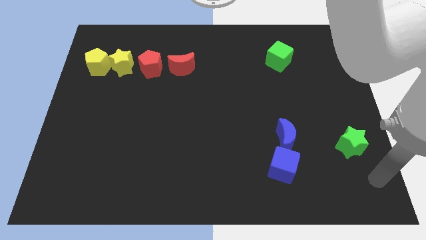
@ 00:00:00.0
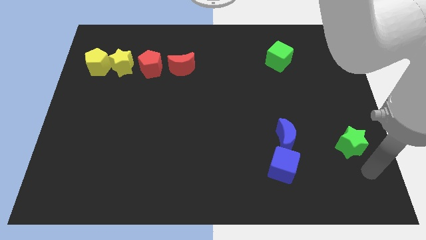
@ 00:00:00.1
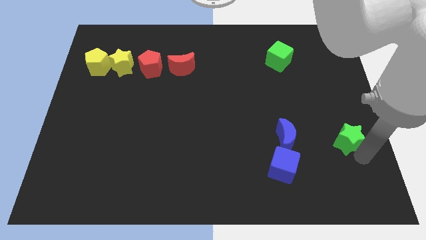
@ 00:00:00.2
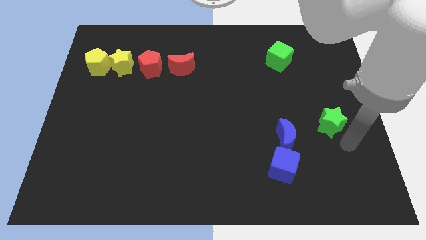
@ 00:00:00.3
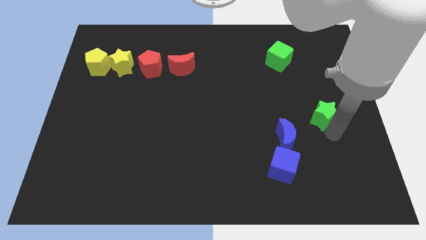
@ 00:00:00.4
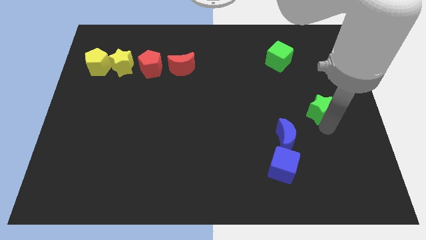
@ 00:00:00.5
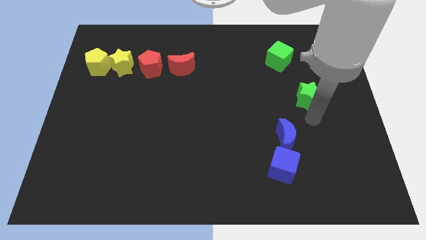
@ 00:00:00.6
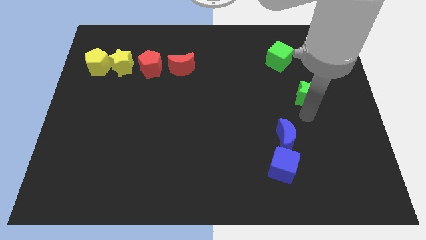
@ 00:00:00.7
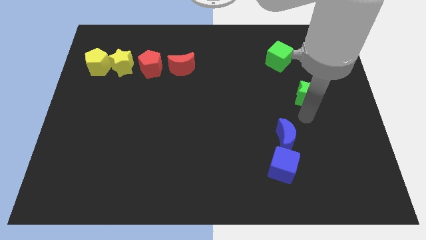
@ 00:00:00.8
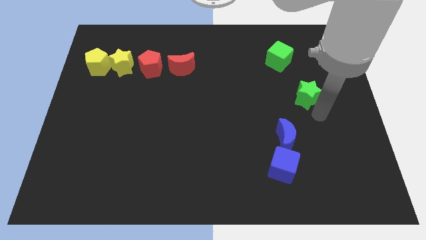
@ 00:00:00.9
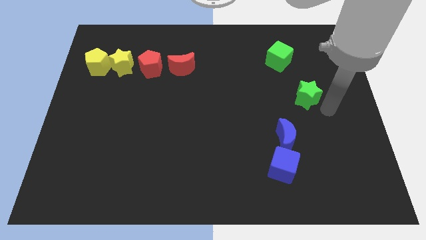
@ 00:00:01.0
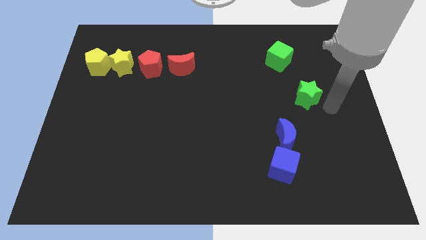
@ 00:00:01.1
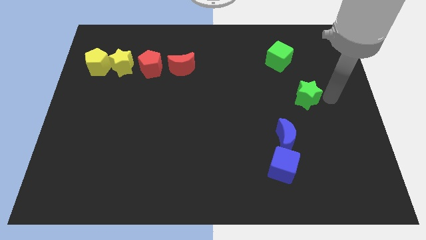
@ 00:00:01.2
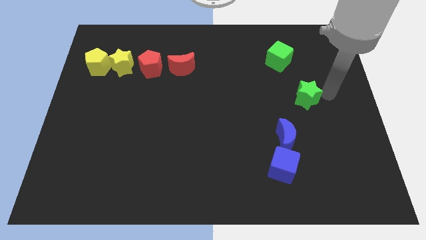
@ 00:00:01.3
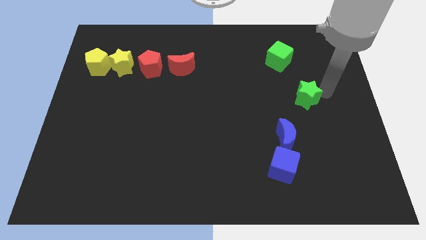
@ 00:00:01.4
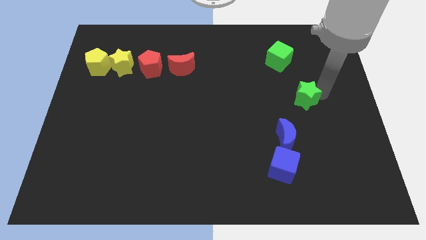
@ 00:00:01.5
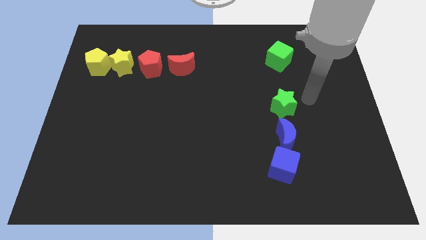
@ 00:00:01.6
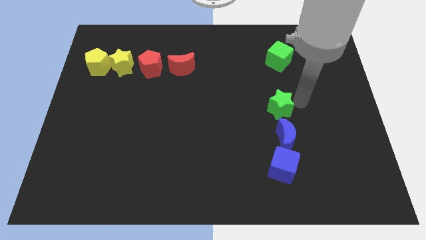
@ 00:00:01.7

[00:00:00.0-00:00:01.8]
push the green star to the top side of the blue moon

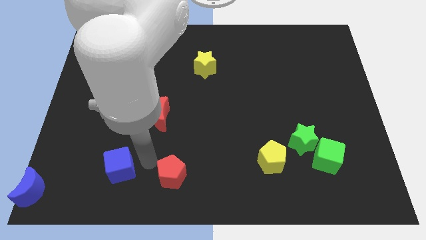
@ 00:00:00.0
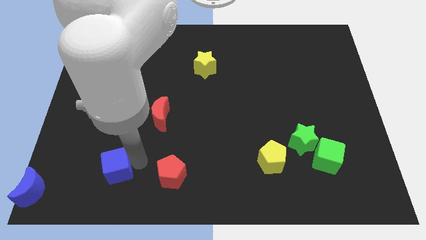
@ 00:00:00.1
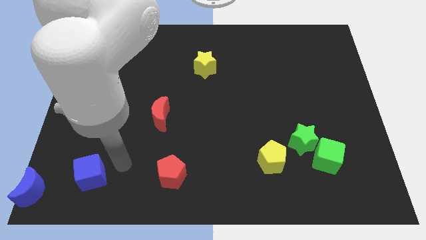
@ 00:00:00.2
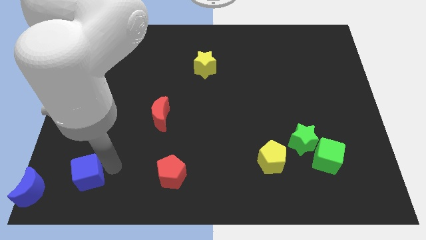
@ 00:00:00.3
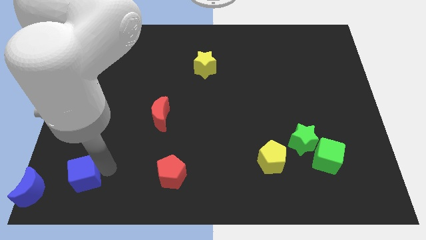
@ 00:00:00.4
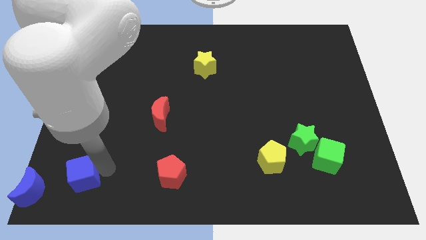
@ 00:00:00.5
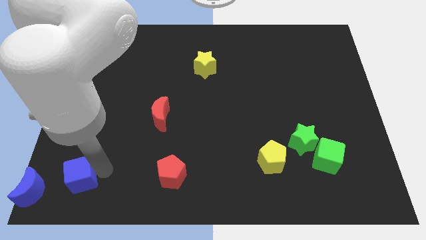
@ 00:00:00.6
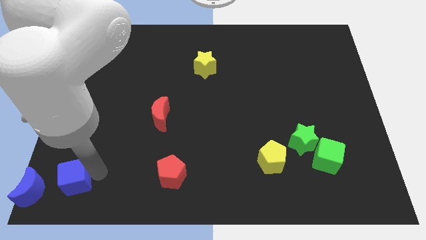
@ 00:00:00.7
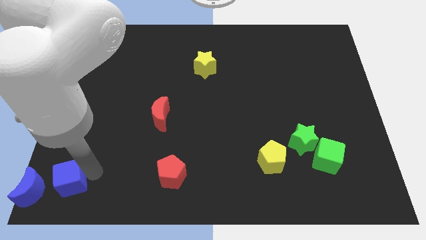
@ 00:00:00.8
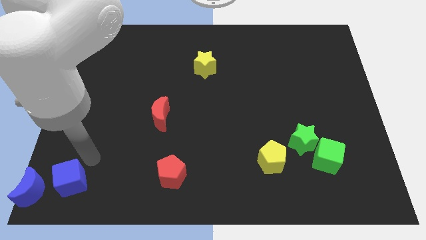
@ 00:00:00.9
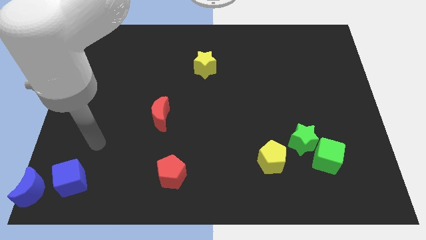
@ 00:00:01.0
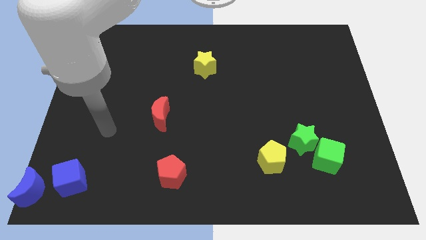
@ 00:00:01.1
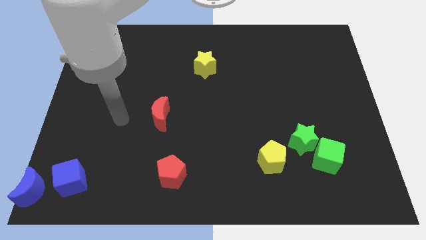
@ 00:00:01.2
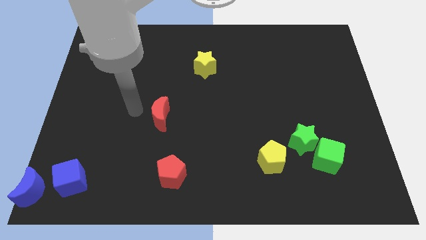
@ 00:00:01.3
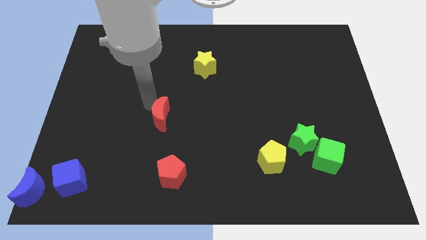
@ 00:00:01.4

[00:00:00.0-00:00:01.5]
slide the blue cube to the top right side of the blue crescent

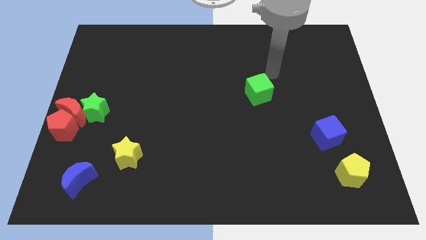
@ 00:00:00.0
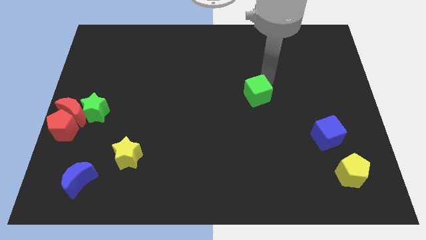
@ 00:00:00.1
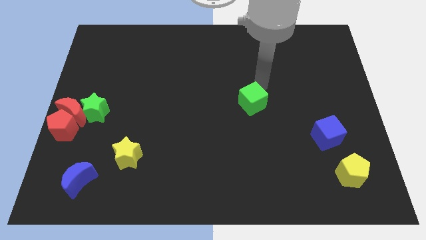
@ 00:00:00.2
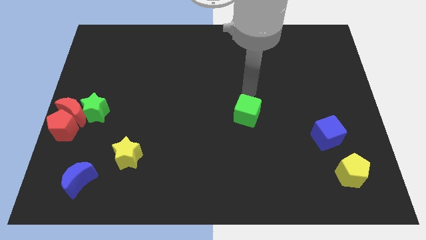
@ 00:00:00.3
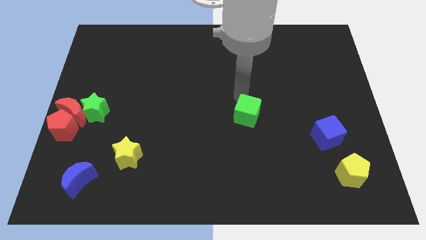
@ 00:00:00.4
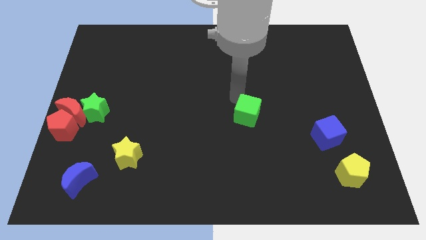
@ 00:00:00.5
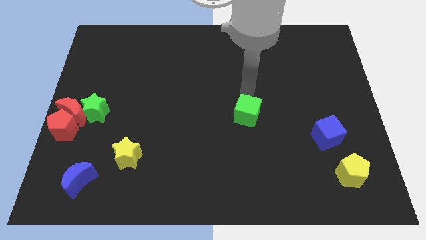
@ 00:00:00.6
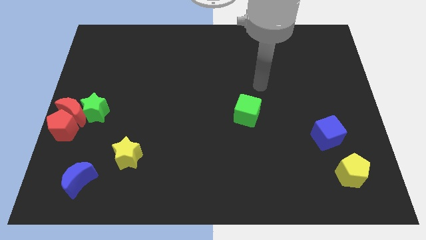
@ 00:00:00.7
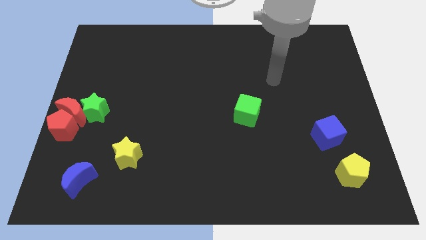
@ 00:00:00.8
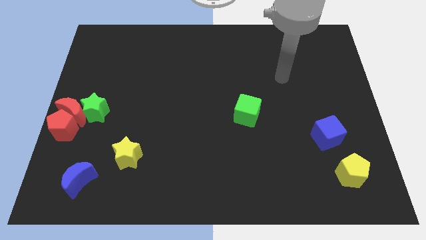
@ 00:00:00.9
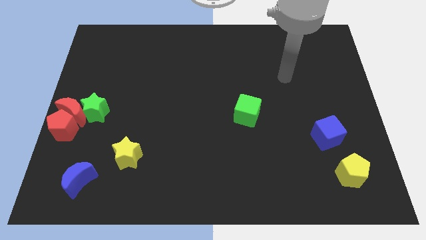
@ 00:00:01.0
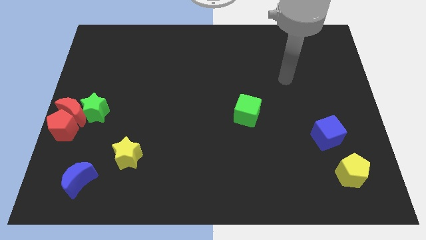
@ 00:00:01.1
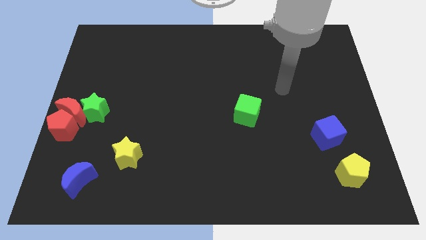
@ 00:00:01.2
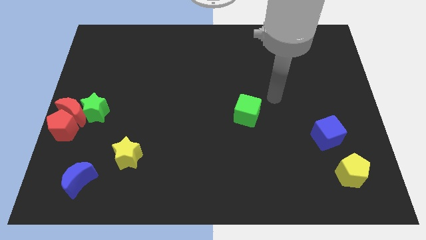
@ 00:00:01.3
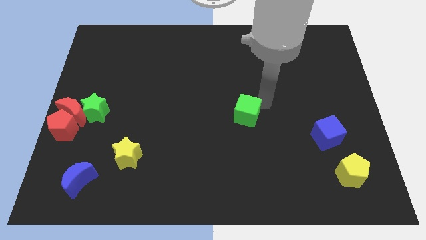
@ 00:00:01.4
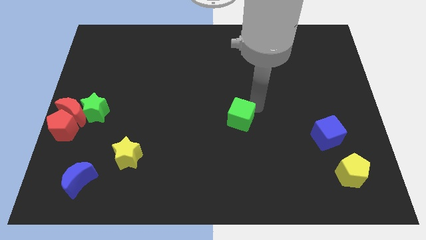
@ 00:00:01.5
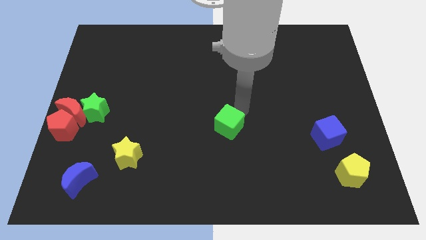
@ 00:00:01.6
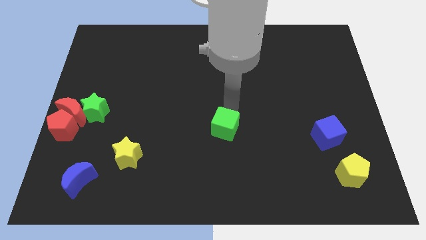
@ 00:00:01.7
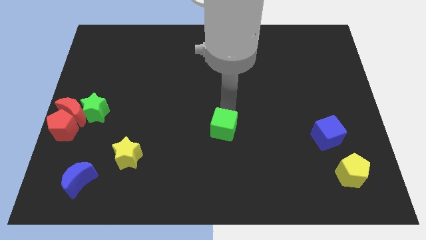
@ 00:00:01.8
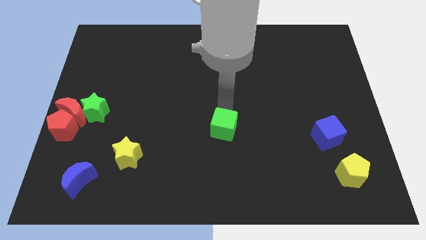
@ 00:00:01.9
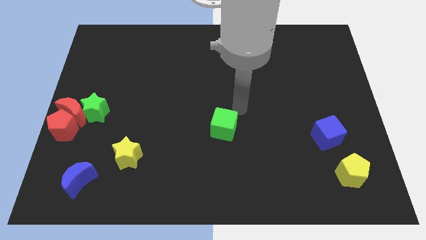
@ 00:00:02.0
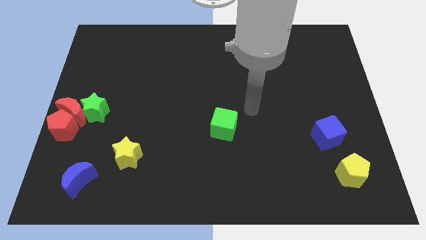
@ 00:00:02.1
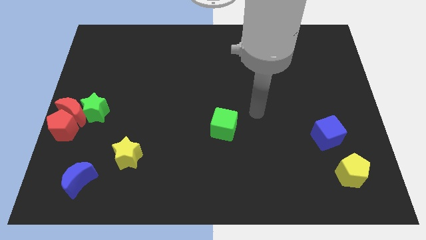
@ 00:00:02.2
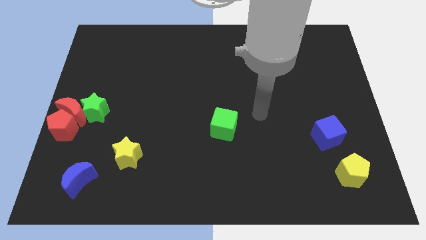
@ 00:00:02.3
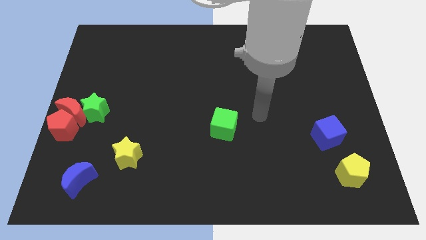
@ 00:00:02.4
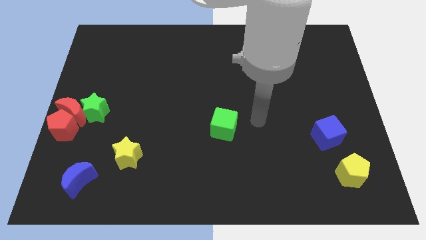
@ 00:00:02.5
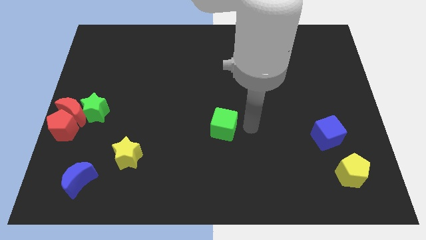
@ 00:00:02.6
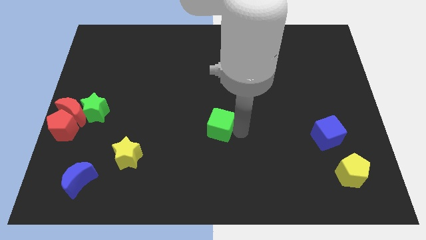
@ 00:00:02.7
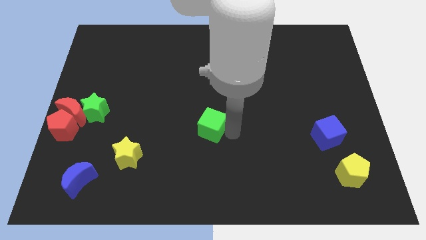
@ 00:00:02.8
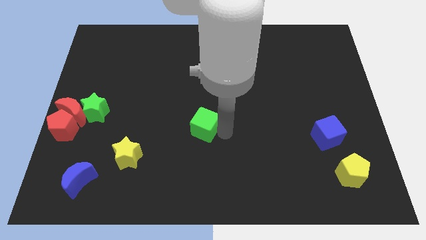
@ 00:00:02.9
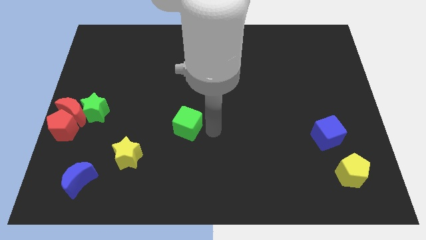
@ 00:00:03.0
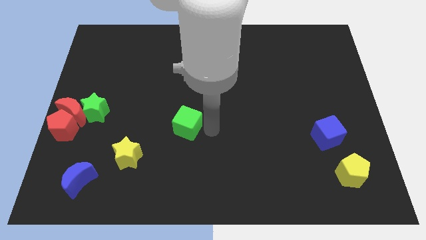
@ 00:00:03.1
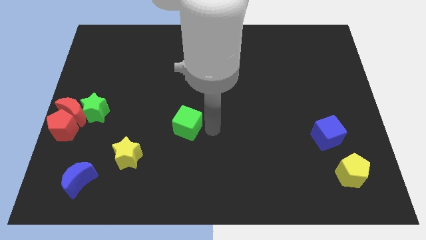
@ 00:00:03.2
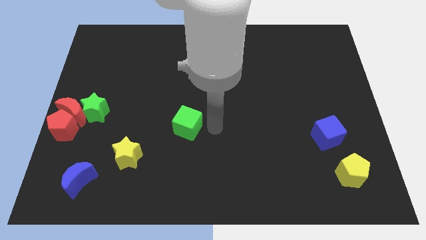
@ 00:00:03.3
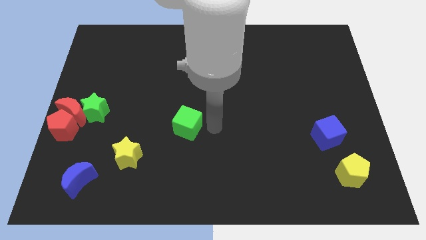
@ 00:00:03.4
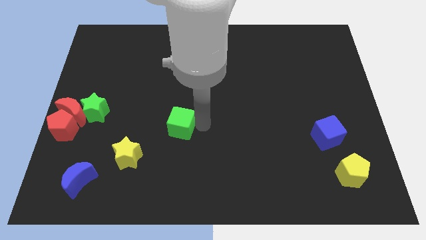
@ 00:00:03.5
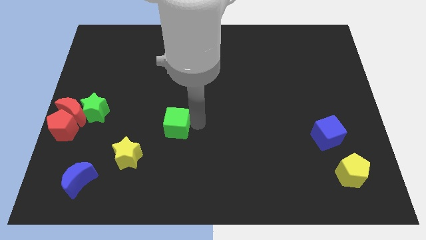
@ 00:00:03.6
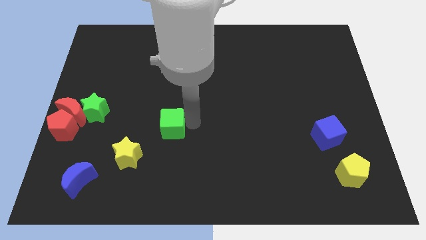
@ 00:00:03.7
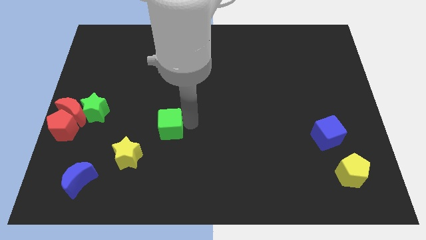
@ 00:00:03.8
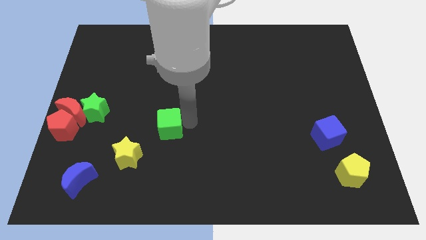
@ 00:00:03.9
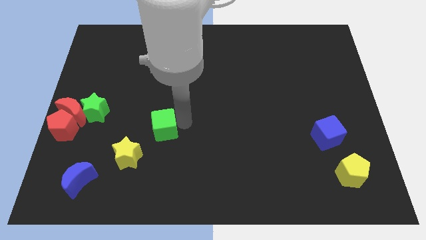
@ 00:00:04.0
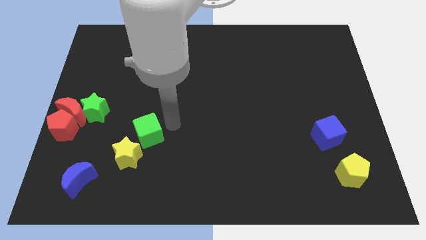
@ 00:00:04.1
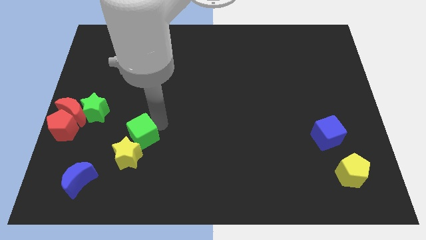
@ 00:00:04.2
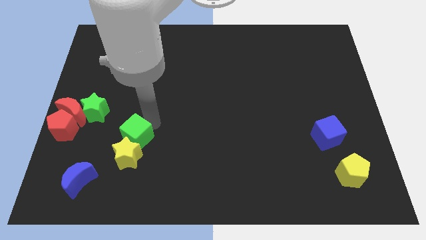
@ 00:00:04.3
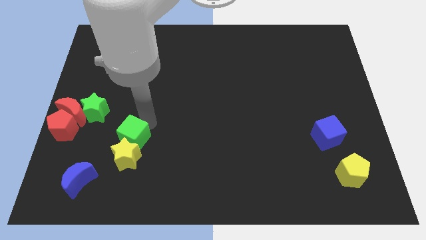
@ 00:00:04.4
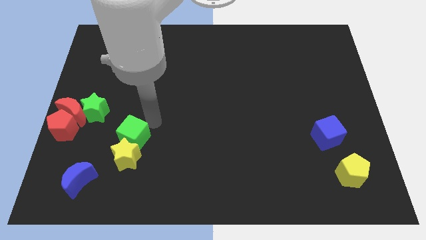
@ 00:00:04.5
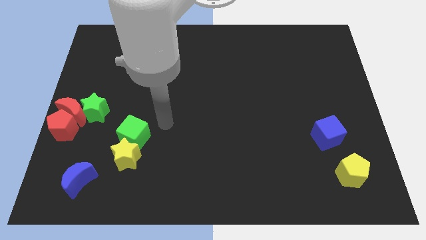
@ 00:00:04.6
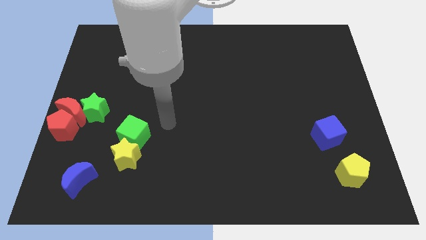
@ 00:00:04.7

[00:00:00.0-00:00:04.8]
push the green cube into the yellow star

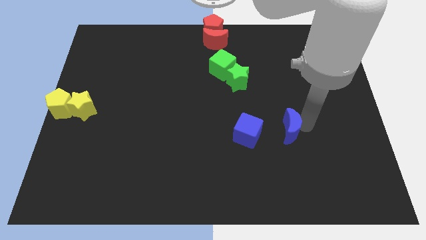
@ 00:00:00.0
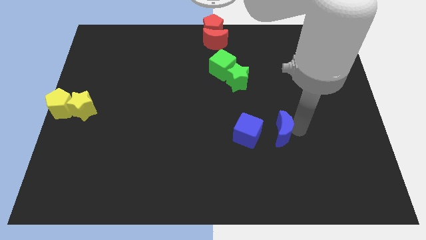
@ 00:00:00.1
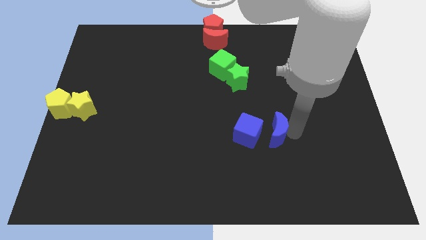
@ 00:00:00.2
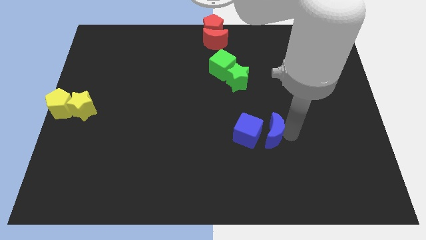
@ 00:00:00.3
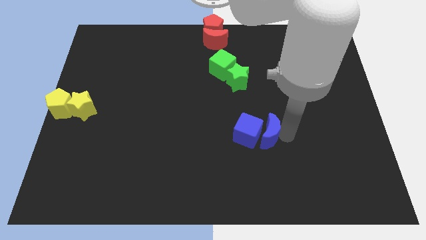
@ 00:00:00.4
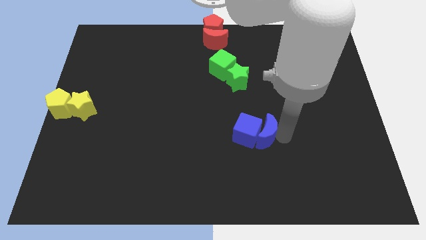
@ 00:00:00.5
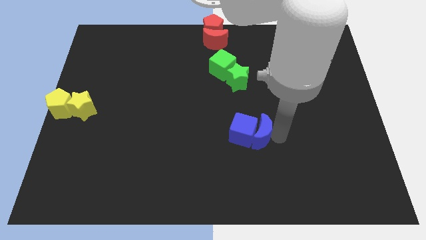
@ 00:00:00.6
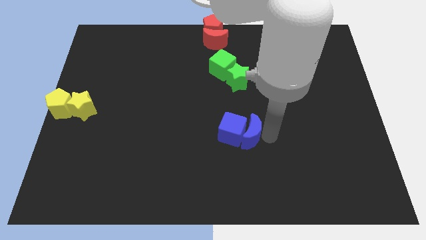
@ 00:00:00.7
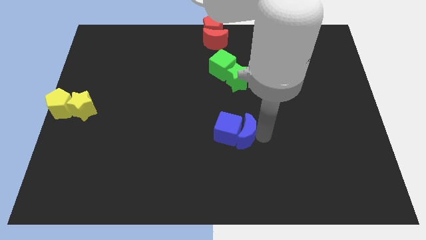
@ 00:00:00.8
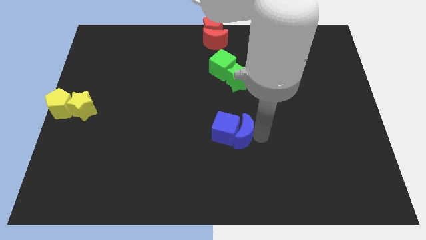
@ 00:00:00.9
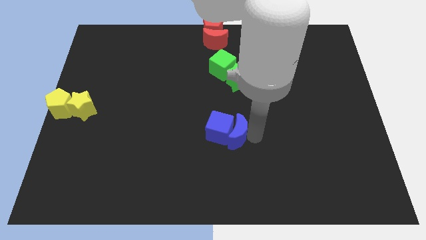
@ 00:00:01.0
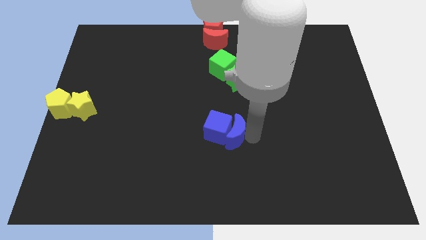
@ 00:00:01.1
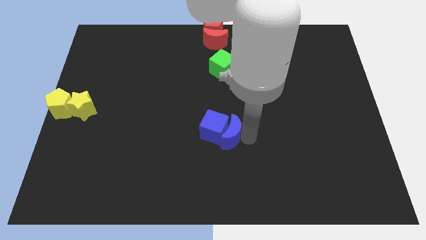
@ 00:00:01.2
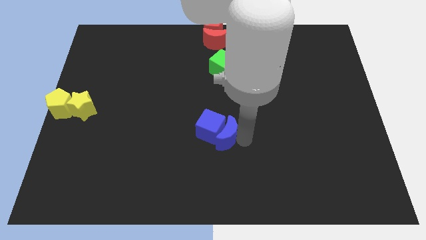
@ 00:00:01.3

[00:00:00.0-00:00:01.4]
push the blue crescent into the blue cube
